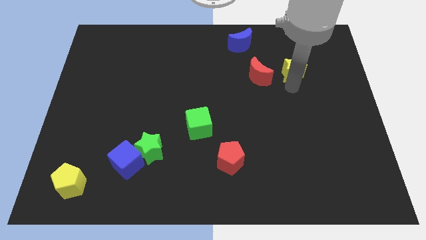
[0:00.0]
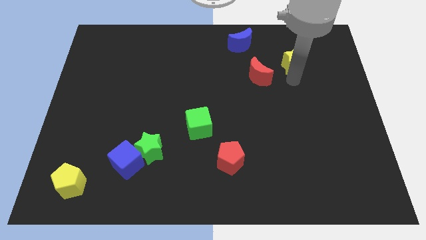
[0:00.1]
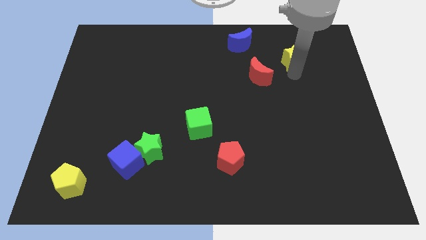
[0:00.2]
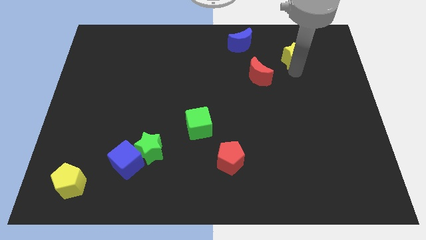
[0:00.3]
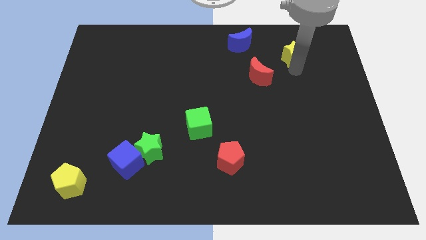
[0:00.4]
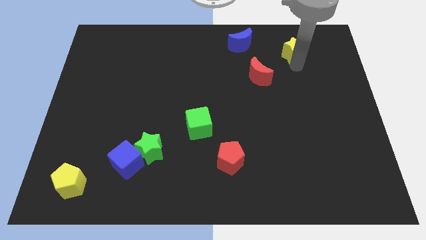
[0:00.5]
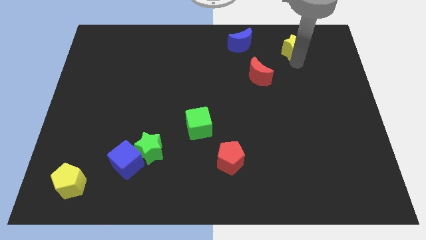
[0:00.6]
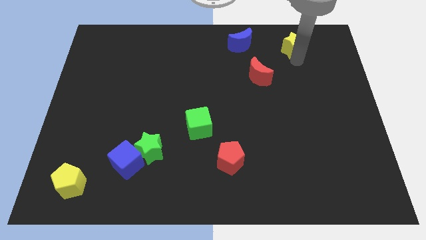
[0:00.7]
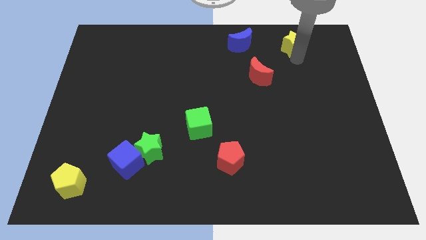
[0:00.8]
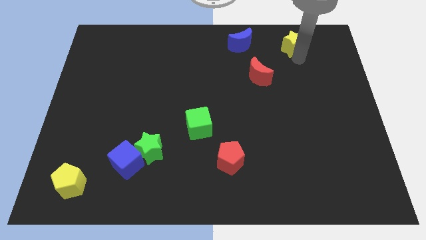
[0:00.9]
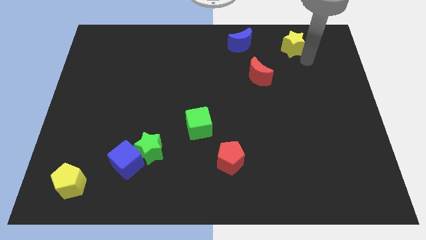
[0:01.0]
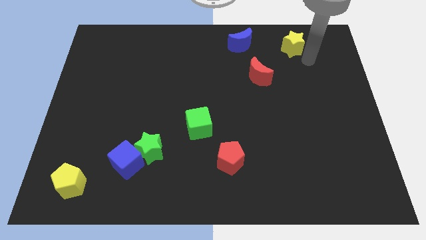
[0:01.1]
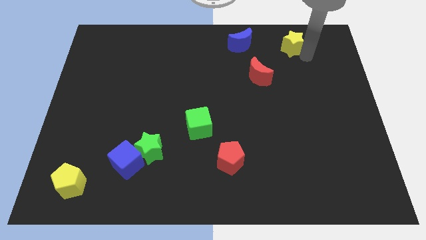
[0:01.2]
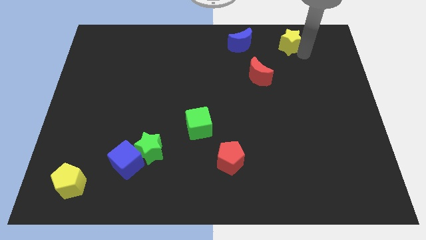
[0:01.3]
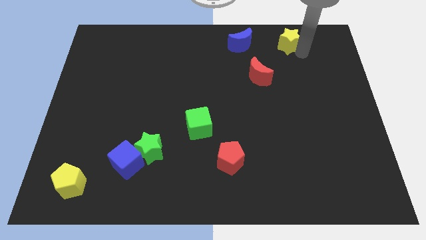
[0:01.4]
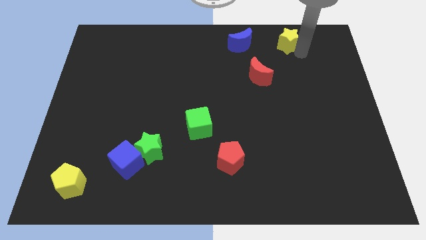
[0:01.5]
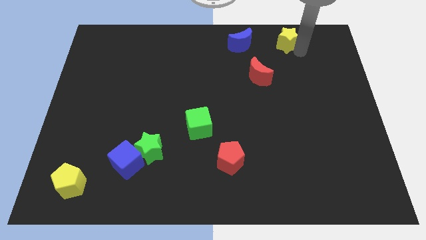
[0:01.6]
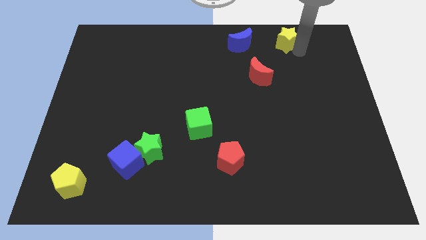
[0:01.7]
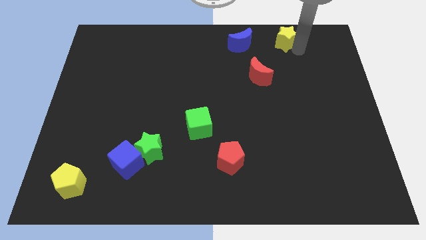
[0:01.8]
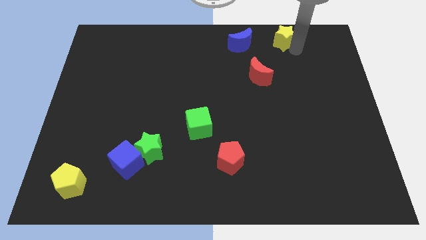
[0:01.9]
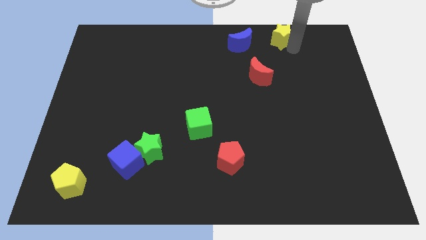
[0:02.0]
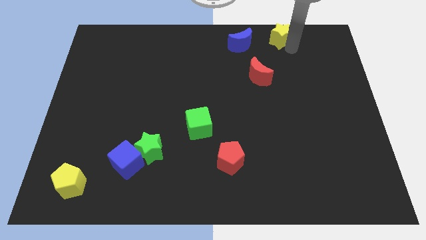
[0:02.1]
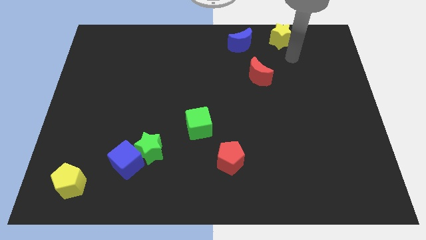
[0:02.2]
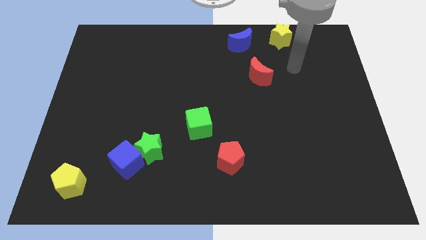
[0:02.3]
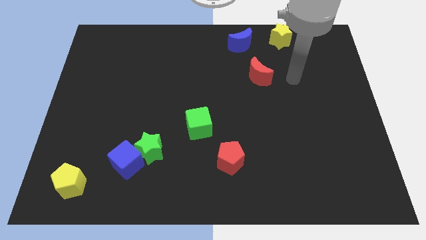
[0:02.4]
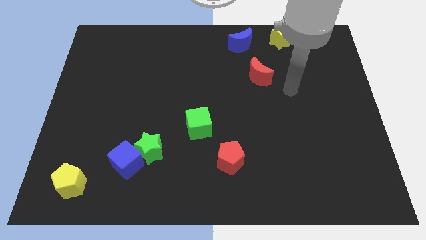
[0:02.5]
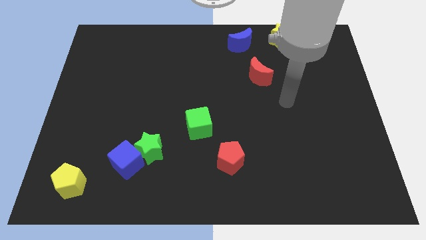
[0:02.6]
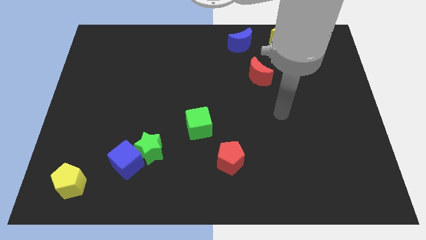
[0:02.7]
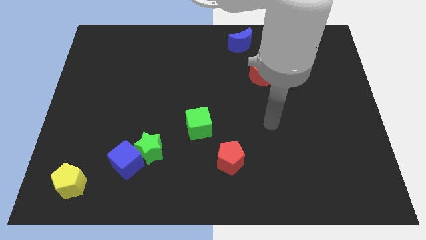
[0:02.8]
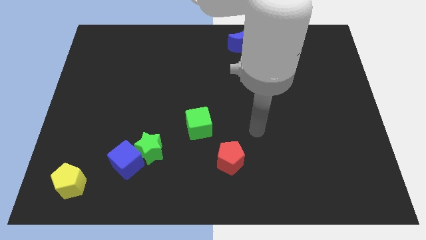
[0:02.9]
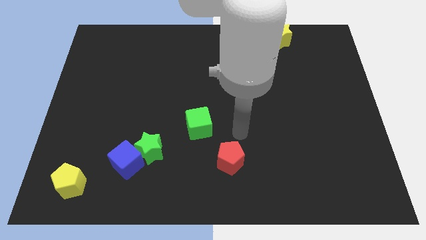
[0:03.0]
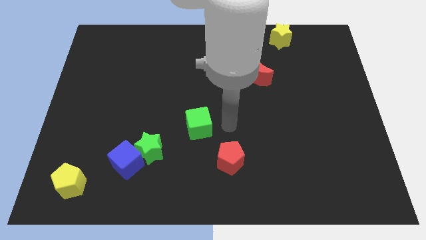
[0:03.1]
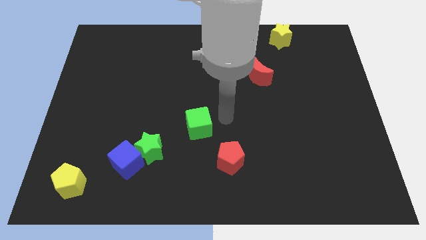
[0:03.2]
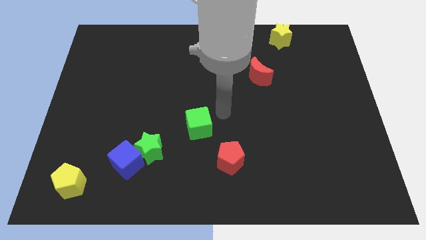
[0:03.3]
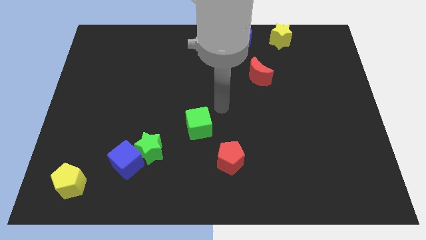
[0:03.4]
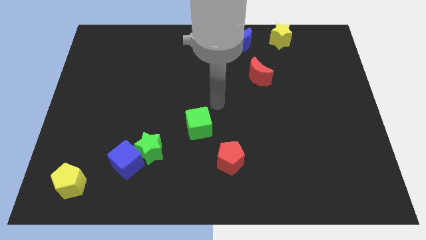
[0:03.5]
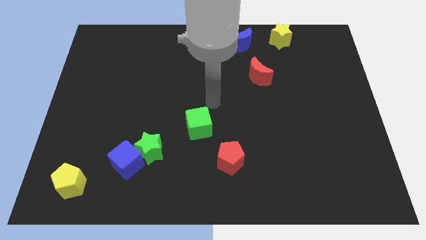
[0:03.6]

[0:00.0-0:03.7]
push the yellow star to the right side of the blue crescent

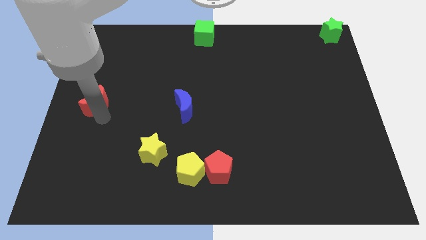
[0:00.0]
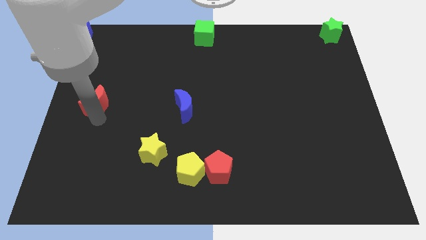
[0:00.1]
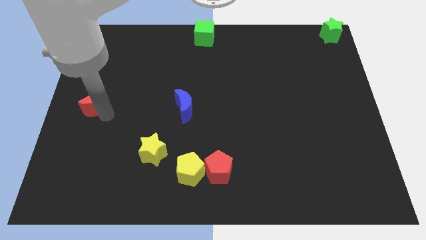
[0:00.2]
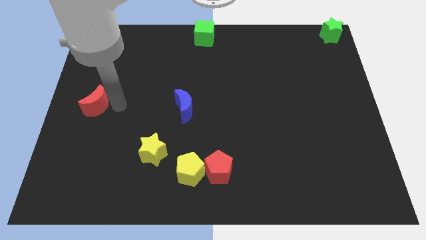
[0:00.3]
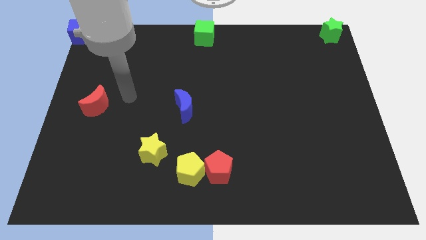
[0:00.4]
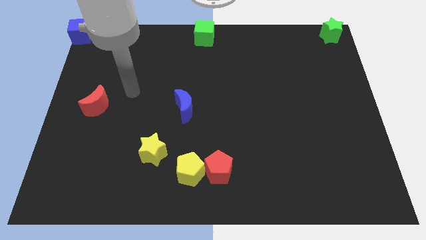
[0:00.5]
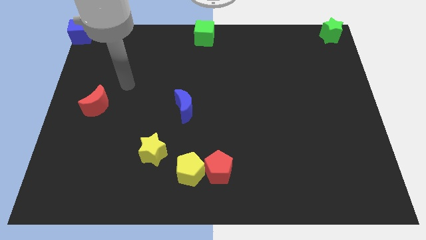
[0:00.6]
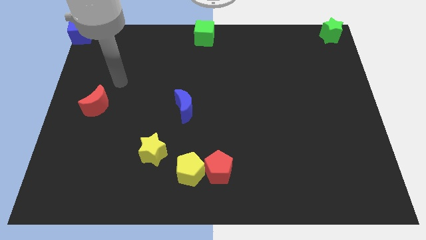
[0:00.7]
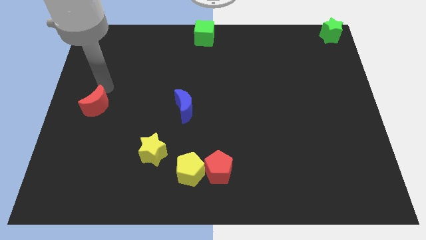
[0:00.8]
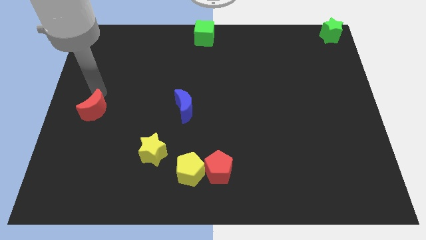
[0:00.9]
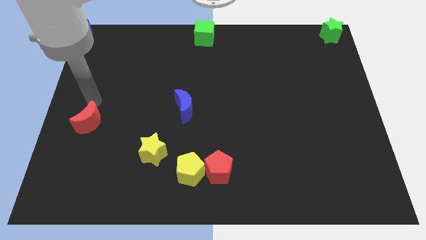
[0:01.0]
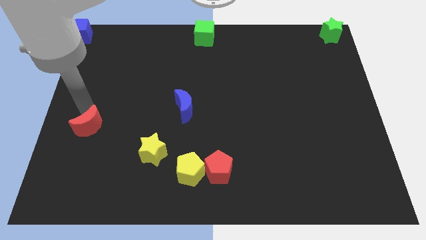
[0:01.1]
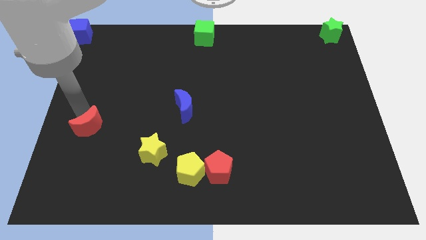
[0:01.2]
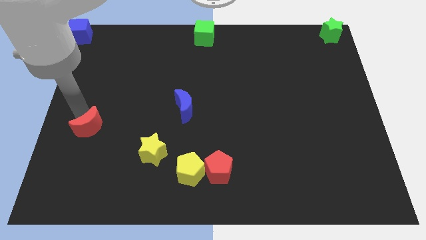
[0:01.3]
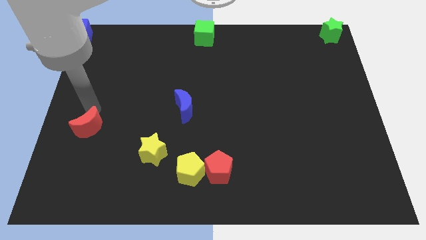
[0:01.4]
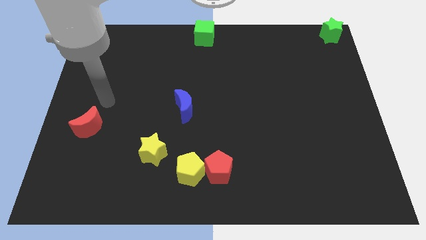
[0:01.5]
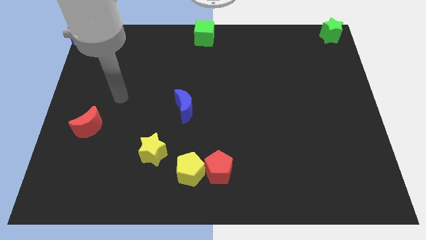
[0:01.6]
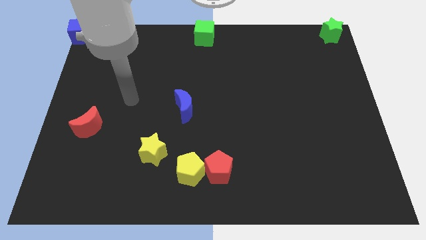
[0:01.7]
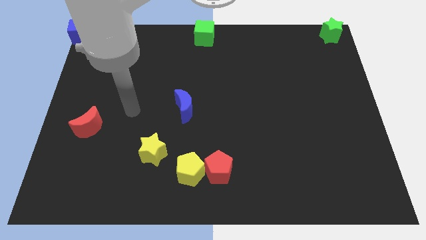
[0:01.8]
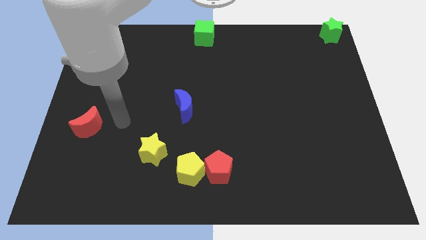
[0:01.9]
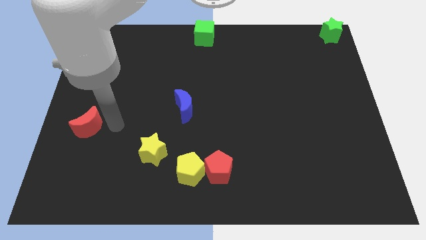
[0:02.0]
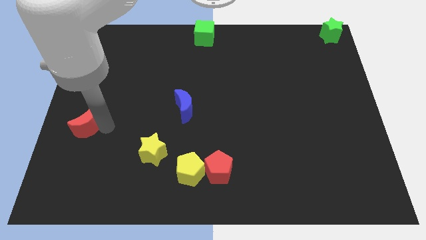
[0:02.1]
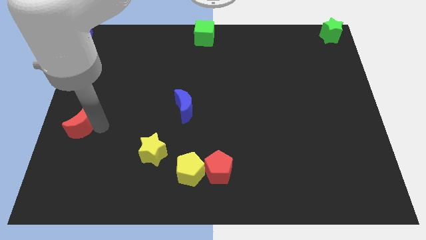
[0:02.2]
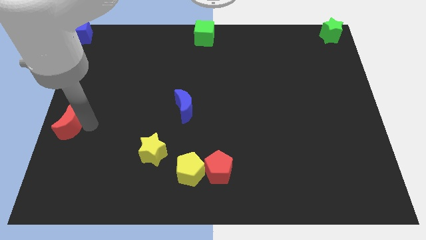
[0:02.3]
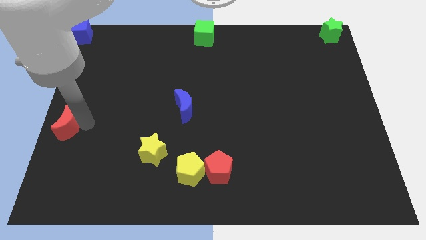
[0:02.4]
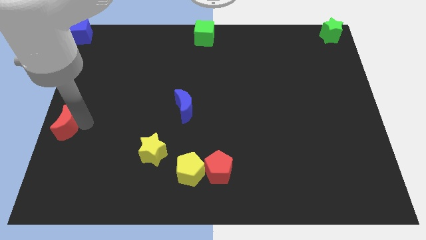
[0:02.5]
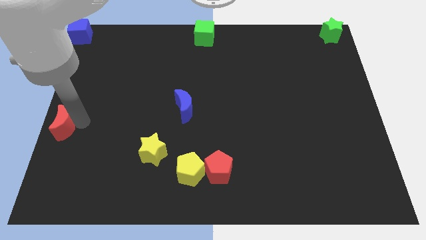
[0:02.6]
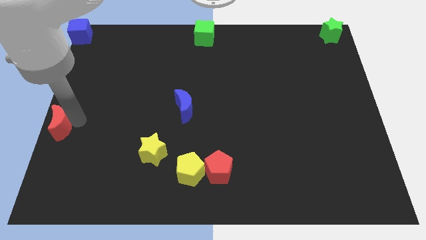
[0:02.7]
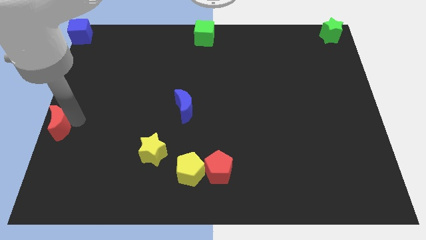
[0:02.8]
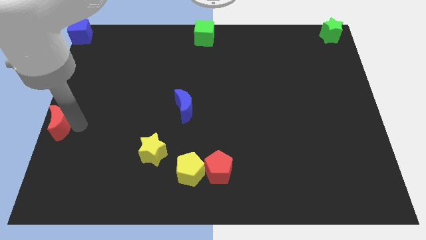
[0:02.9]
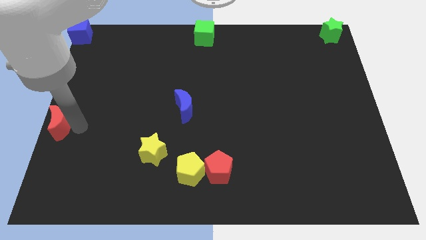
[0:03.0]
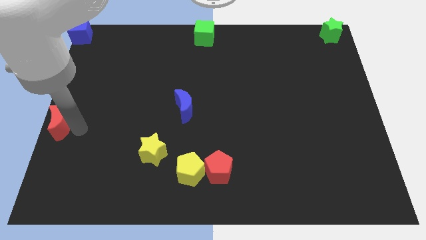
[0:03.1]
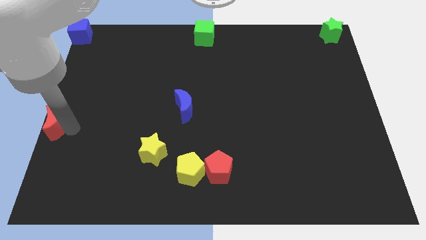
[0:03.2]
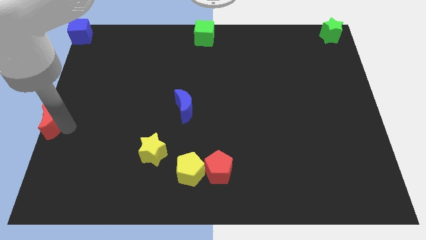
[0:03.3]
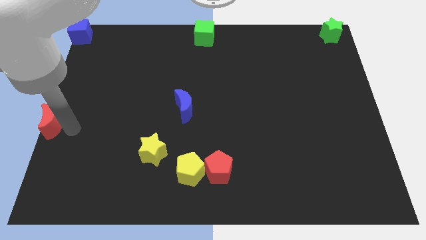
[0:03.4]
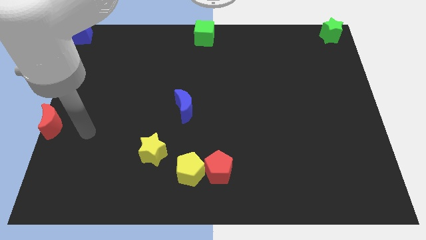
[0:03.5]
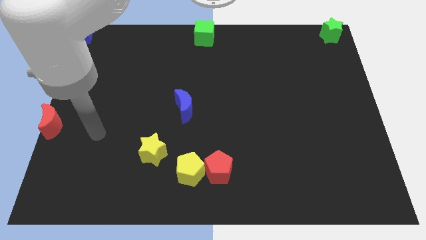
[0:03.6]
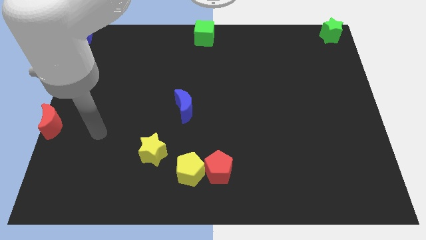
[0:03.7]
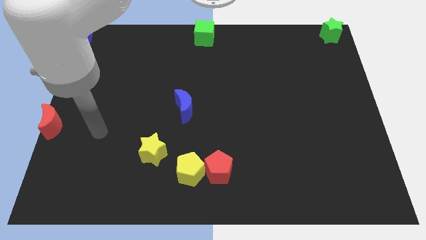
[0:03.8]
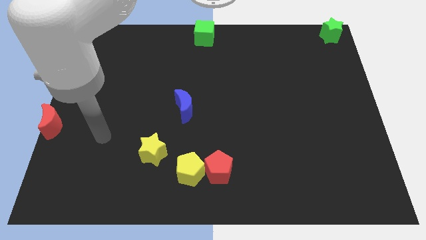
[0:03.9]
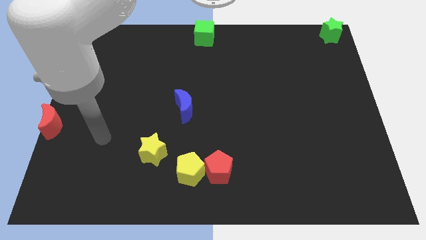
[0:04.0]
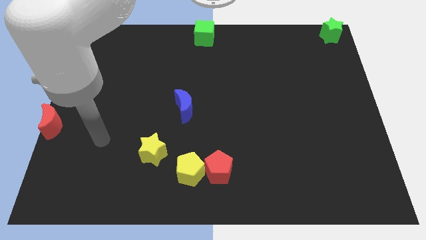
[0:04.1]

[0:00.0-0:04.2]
move red crescent to the left centre of the board

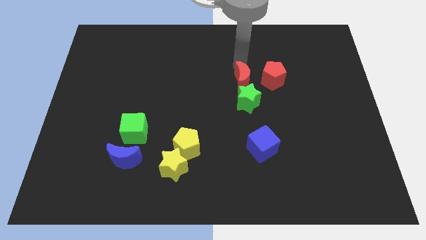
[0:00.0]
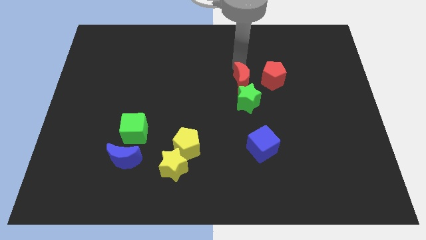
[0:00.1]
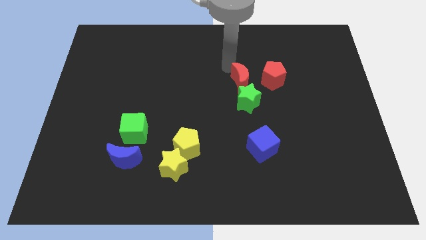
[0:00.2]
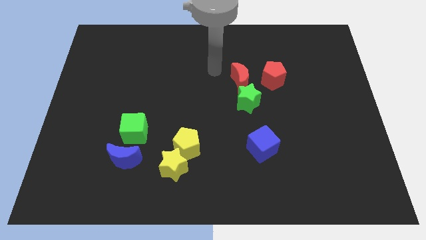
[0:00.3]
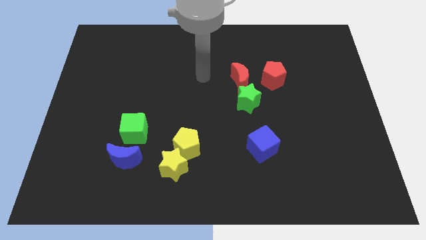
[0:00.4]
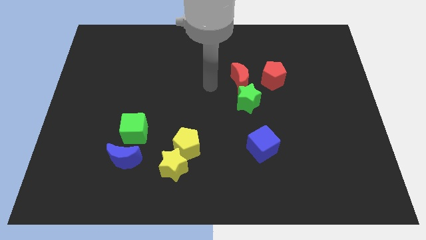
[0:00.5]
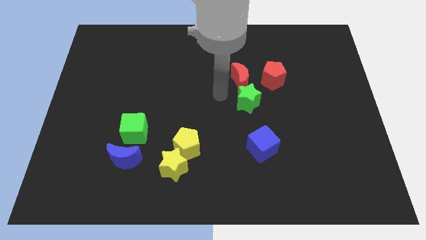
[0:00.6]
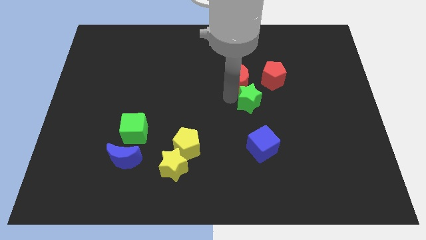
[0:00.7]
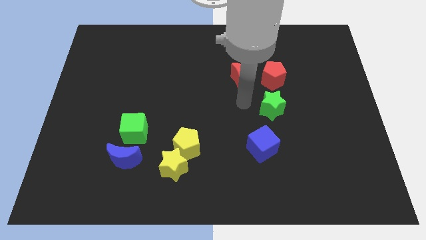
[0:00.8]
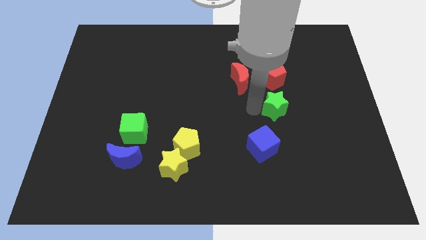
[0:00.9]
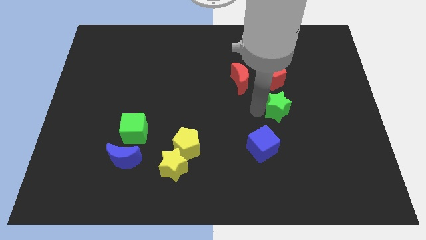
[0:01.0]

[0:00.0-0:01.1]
push the green star towards right side
